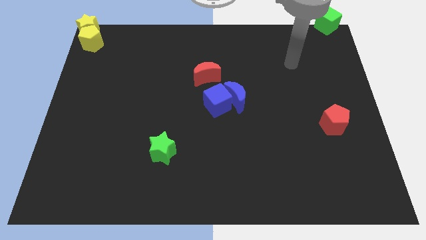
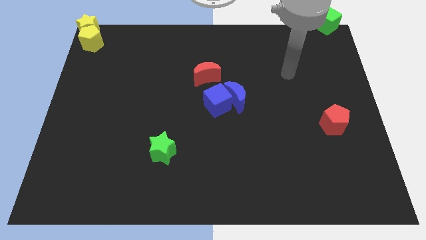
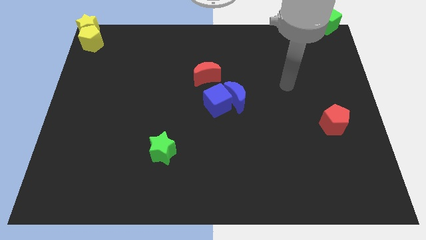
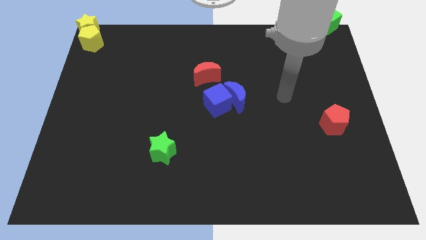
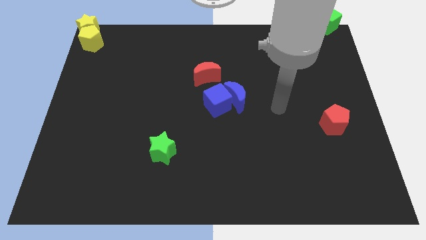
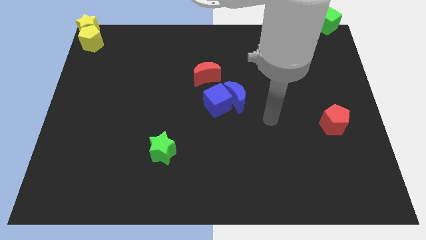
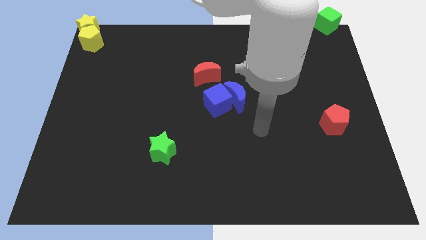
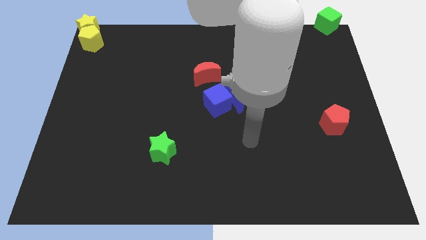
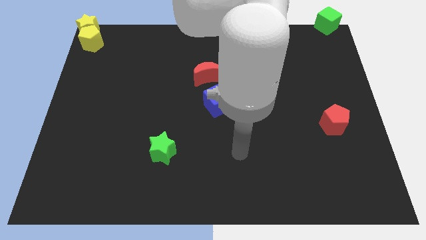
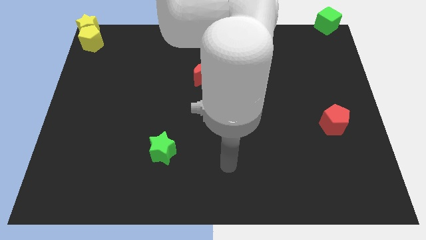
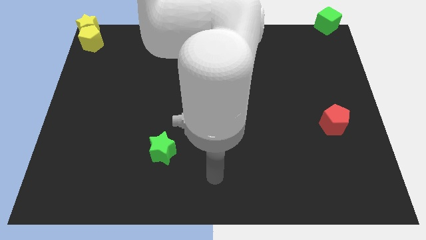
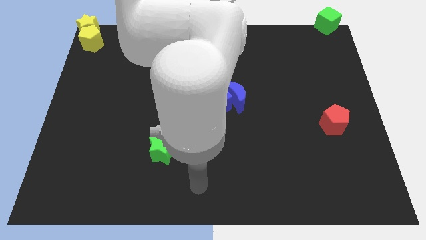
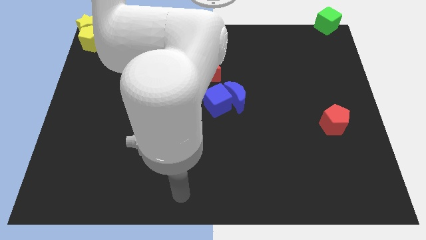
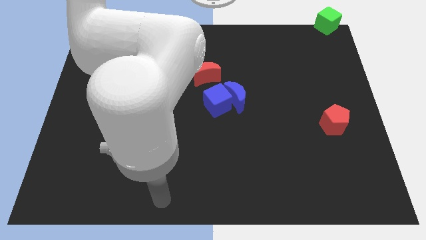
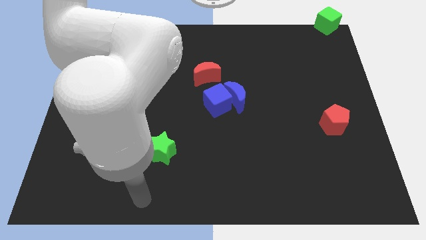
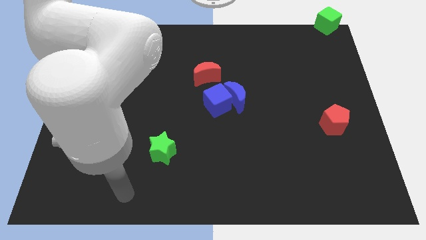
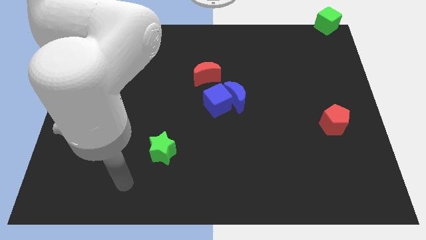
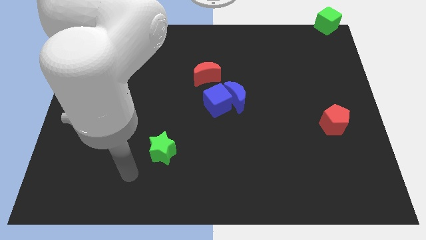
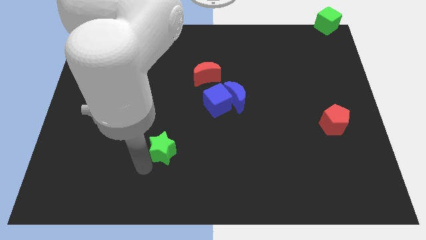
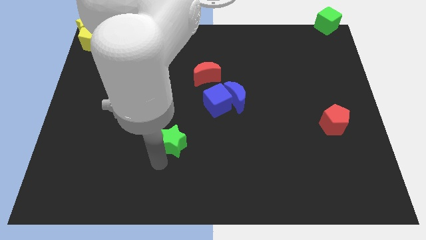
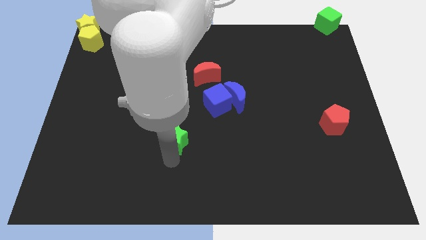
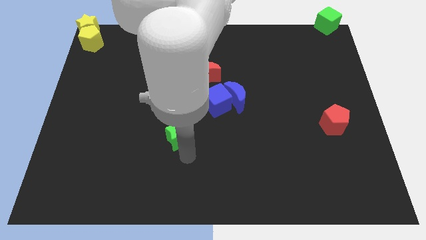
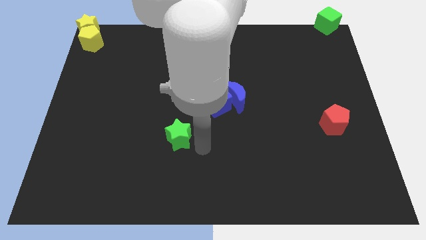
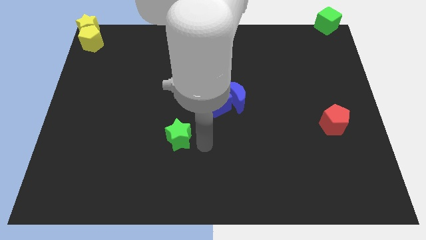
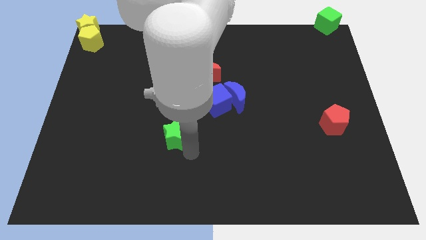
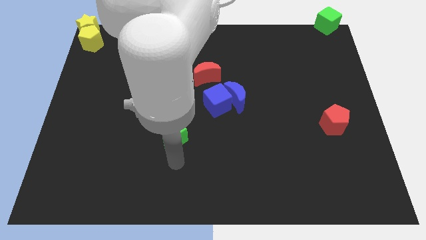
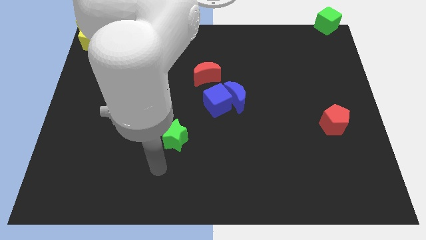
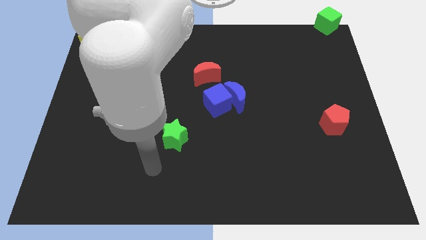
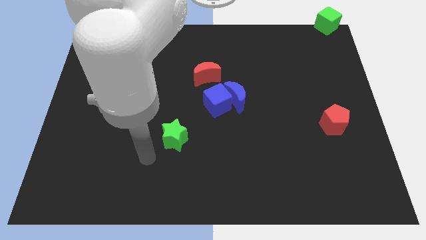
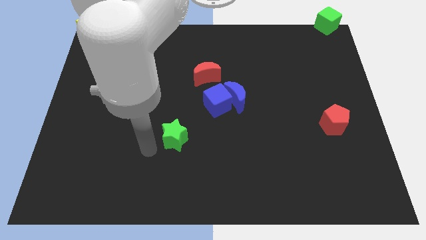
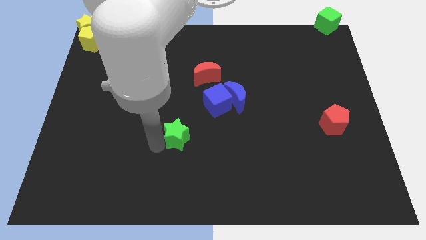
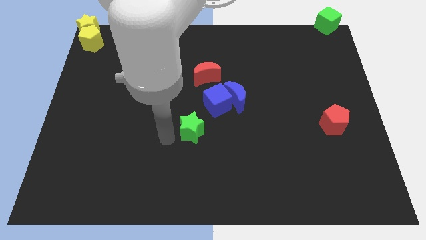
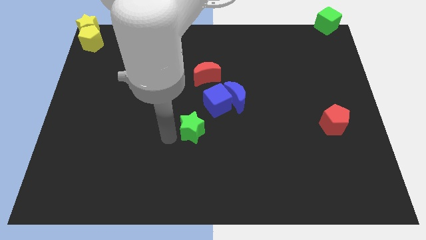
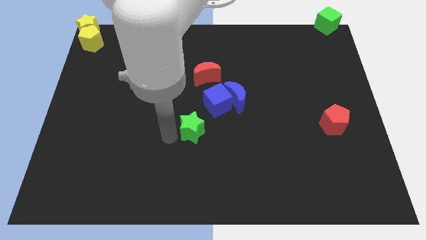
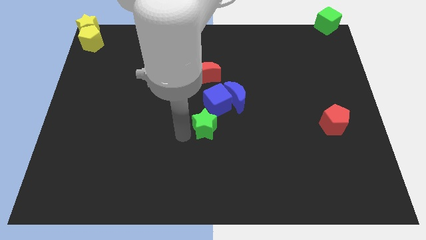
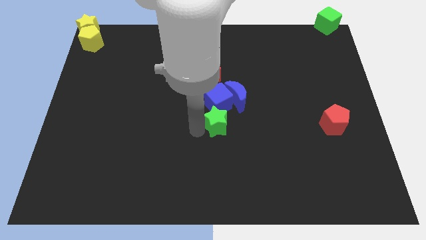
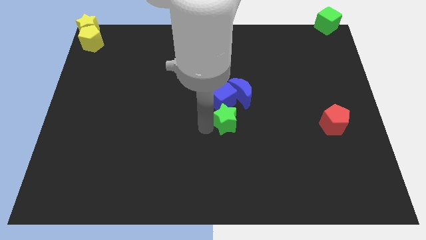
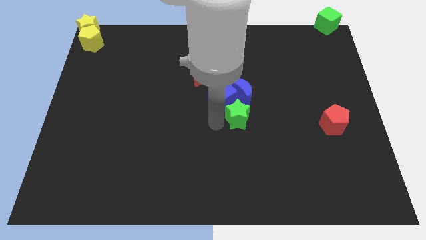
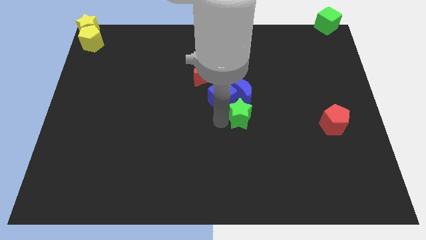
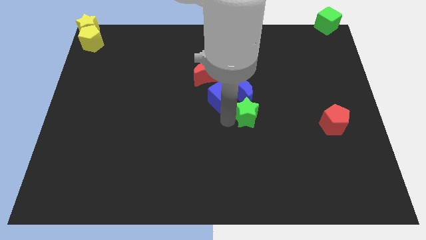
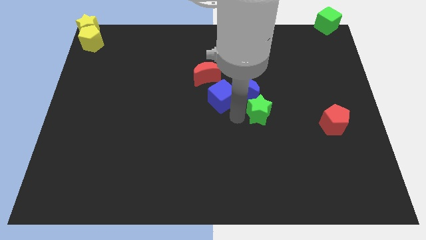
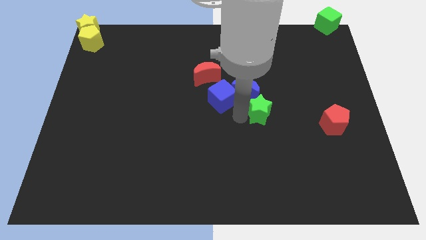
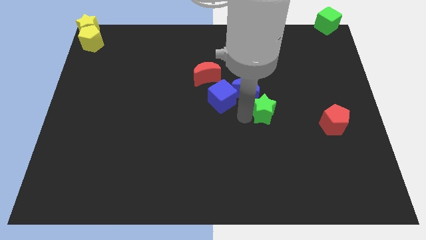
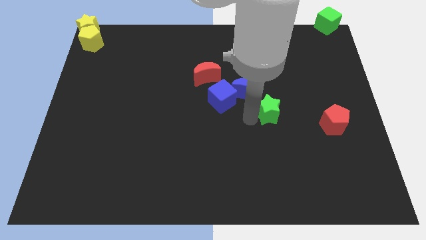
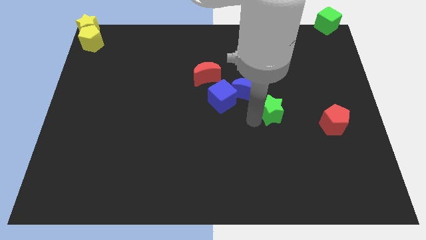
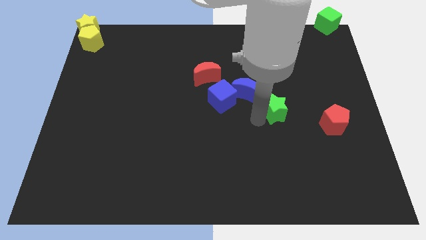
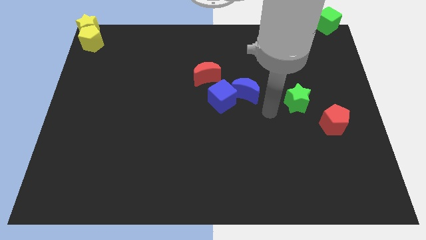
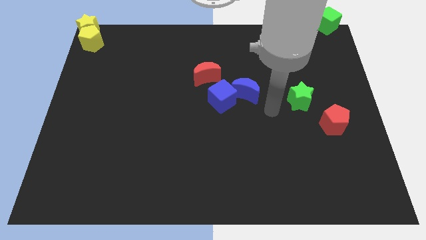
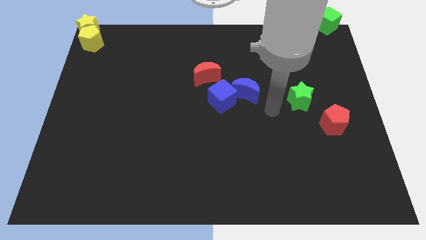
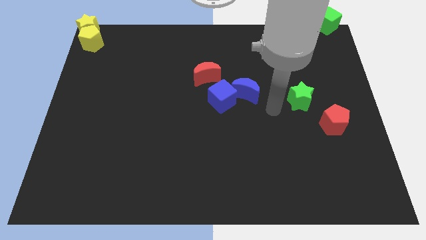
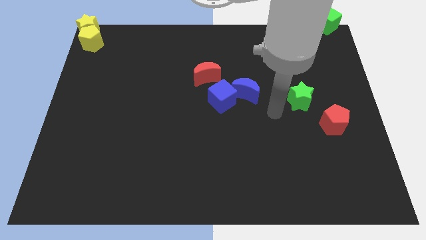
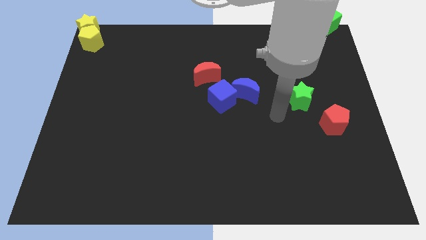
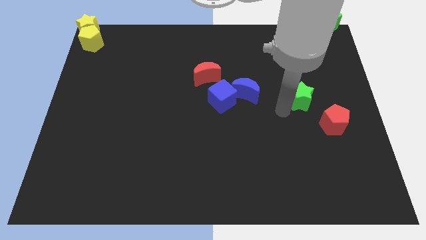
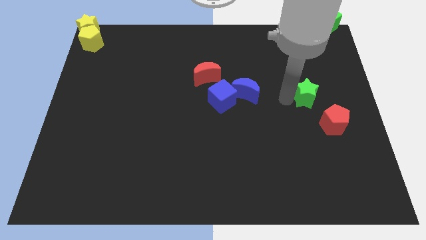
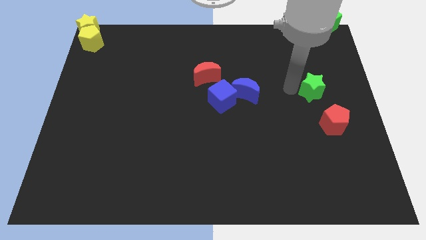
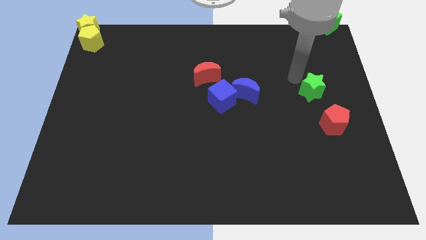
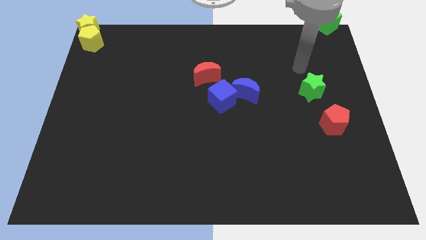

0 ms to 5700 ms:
place green star to the right of blue moon

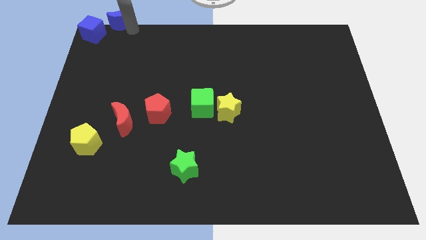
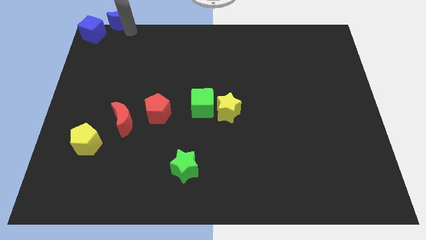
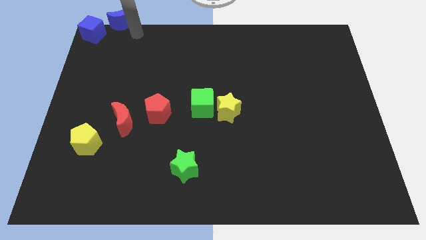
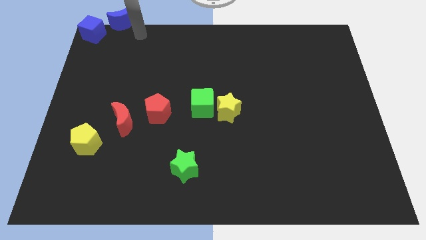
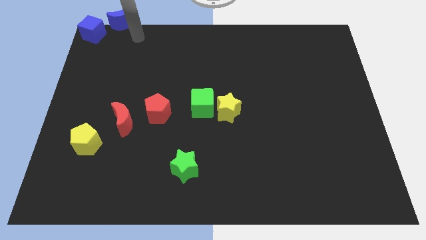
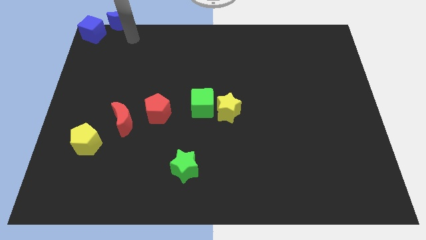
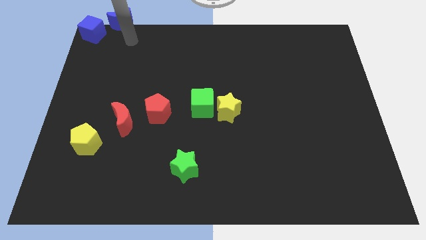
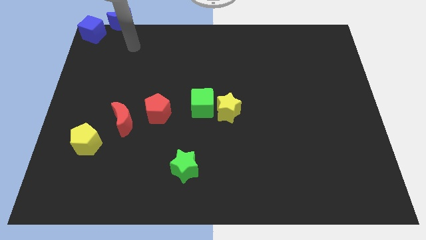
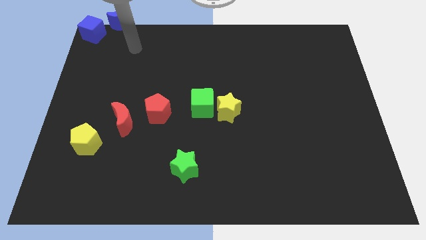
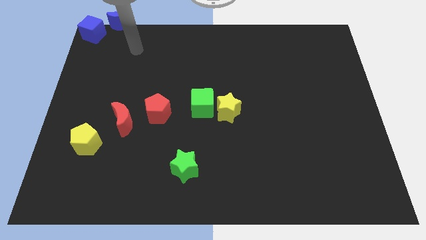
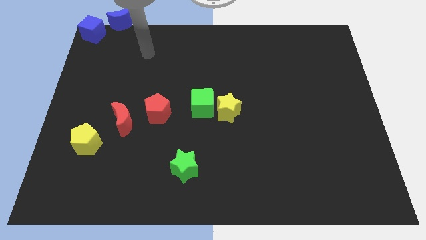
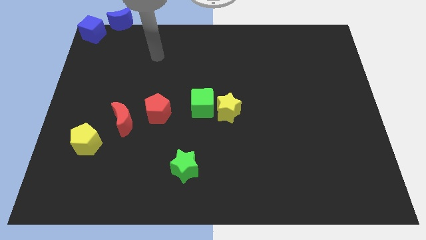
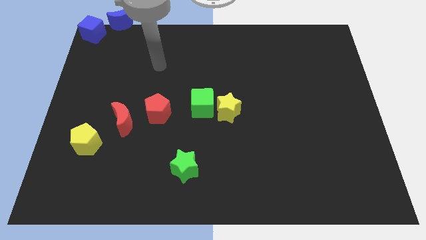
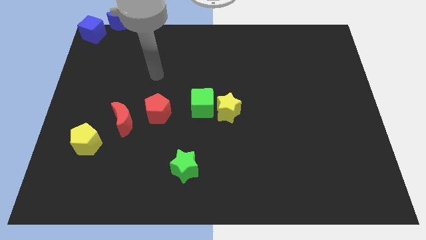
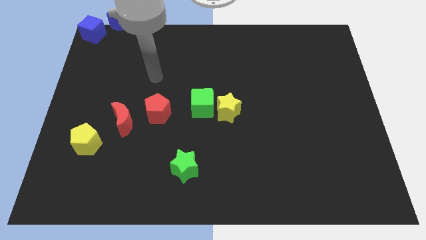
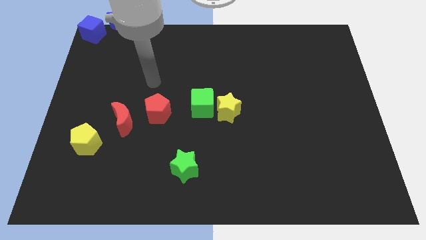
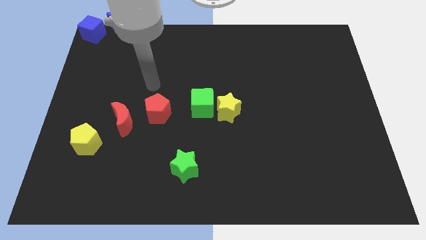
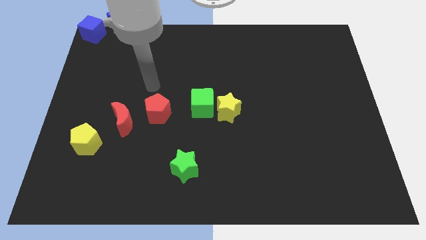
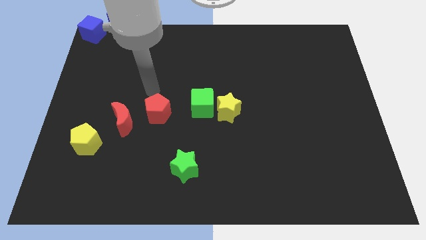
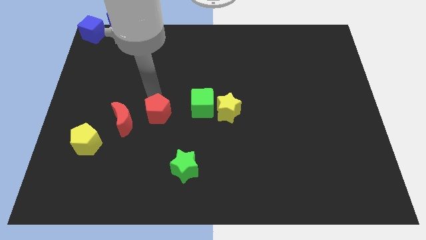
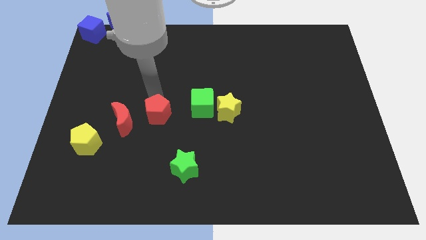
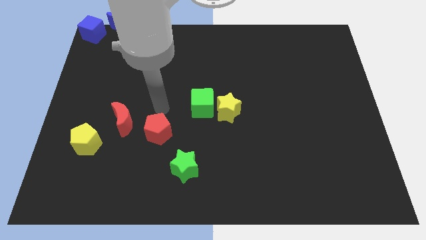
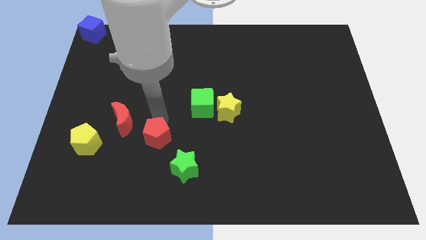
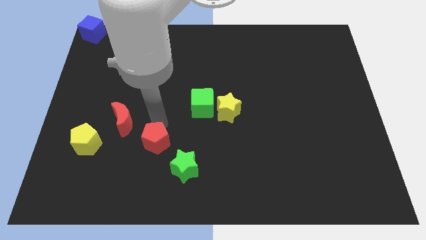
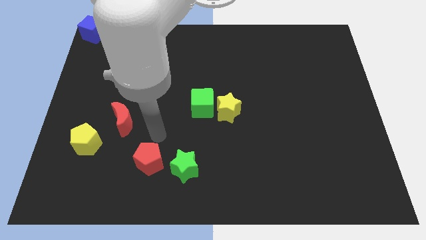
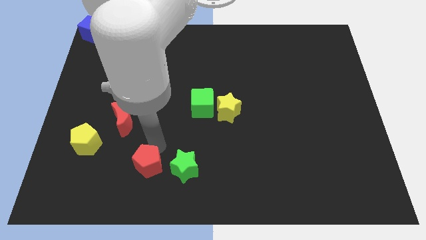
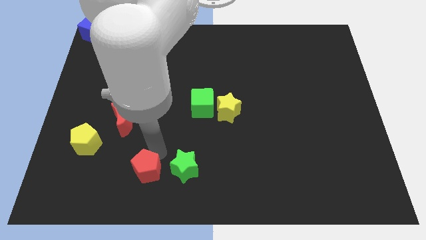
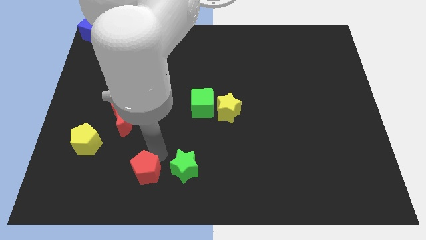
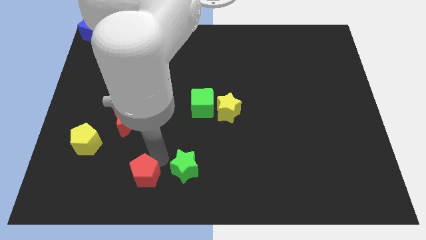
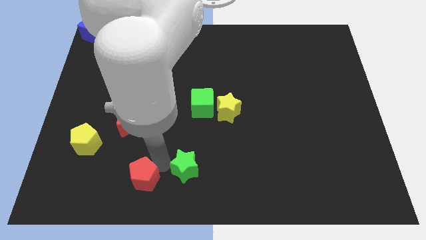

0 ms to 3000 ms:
push the red pentagon towards the bottom of the red moon

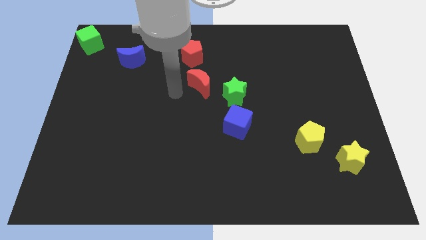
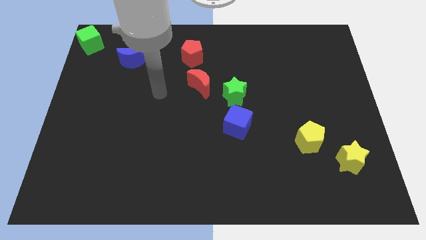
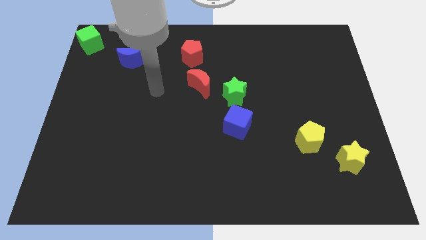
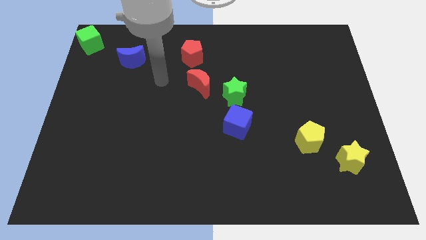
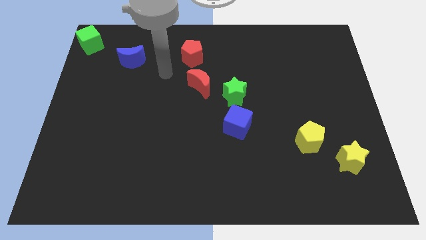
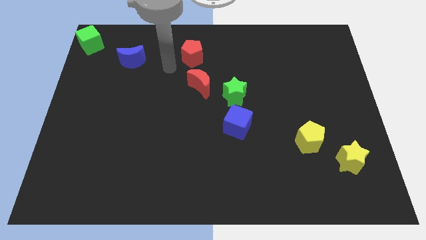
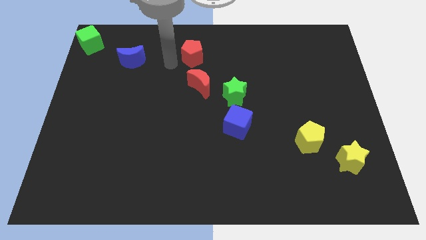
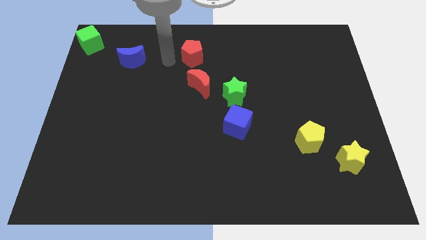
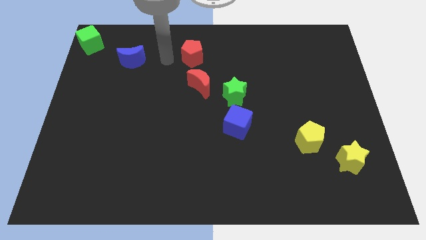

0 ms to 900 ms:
move your arm left to the red pentagon
